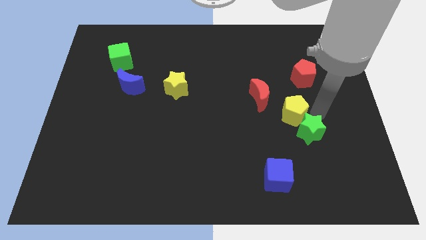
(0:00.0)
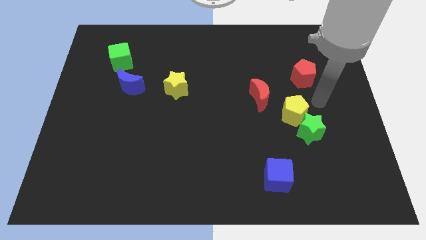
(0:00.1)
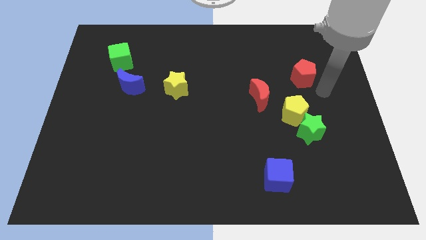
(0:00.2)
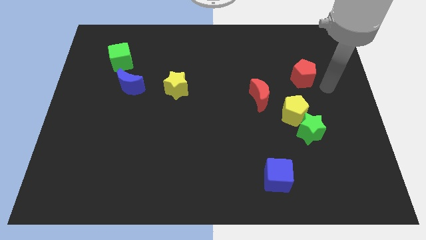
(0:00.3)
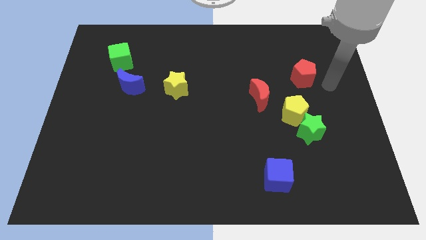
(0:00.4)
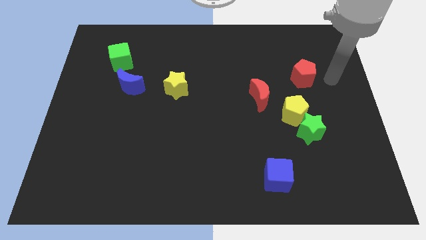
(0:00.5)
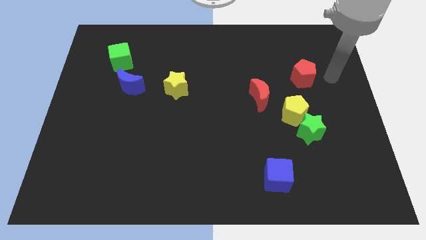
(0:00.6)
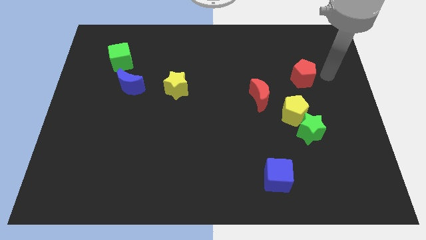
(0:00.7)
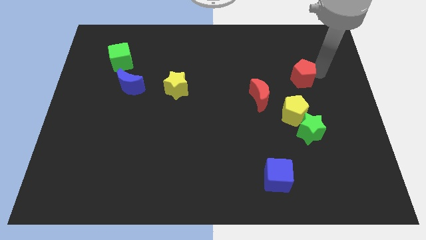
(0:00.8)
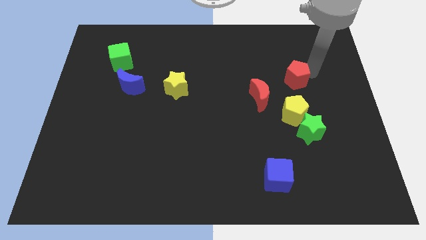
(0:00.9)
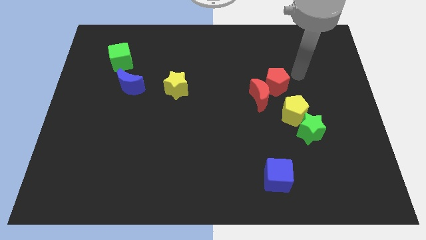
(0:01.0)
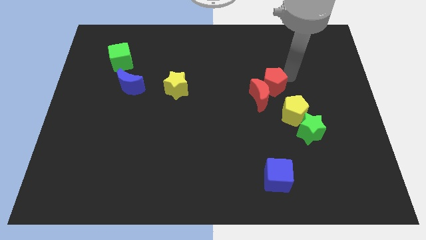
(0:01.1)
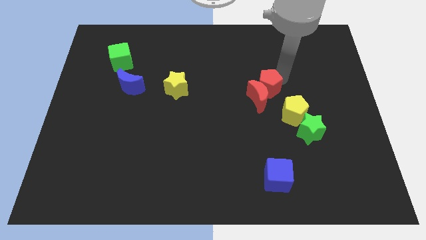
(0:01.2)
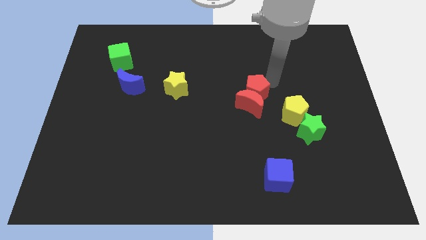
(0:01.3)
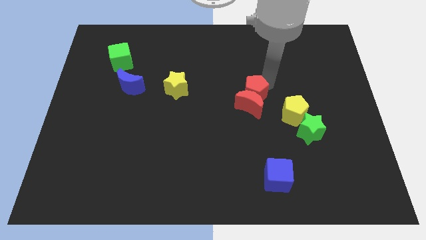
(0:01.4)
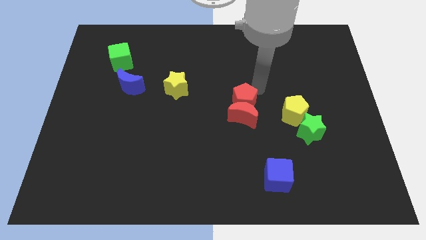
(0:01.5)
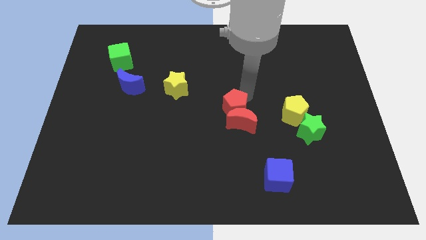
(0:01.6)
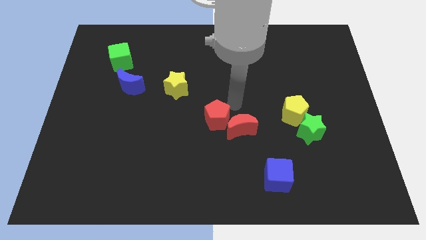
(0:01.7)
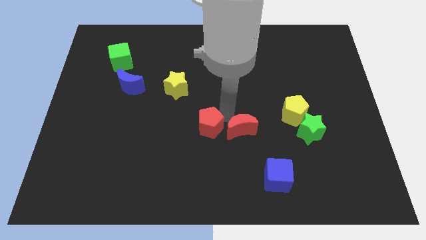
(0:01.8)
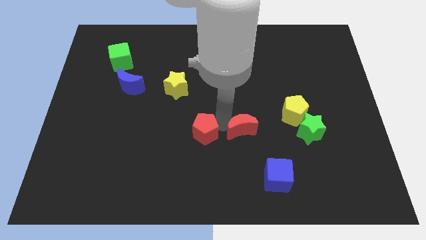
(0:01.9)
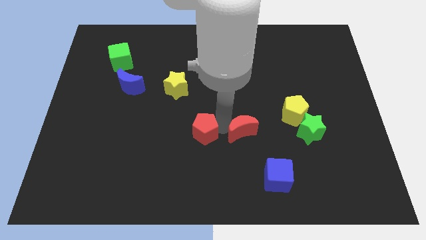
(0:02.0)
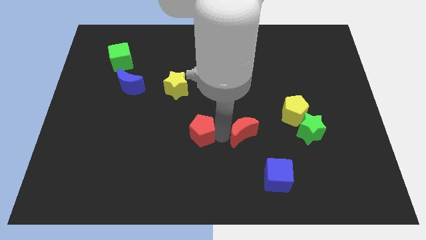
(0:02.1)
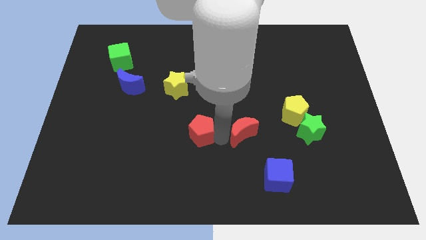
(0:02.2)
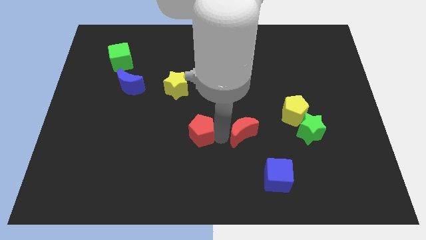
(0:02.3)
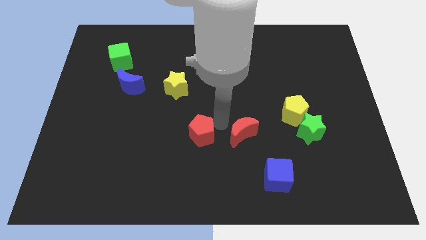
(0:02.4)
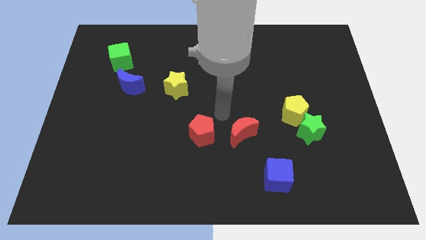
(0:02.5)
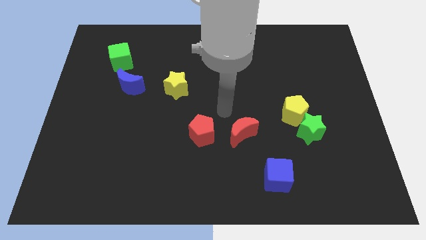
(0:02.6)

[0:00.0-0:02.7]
push the red blocks towards the bottom center of the board

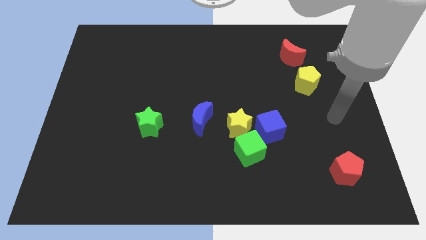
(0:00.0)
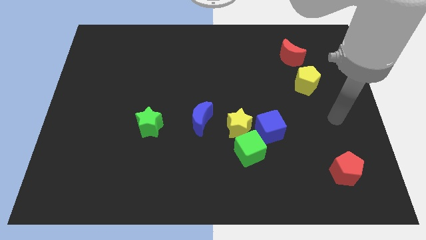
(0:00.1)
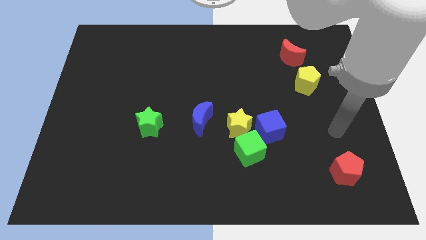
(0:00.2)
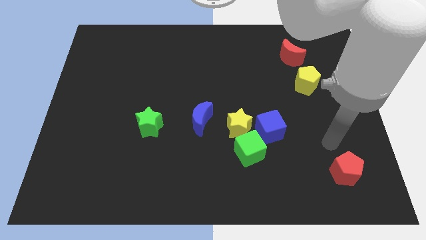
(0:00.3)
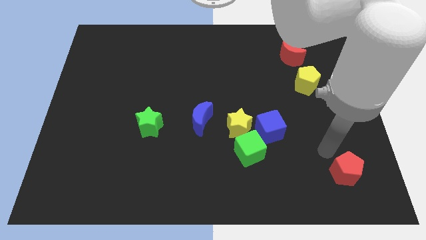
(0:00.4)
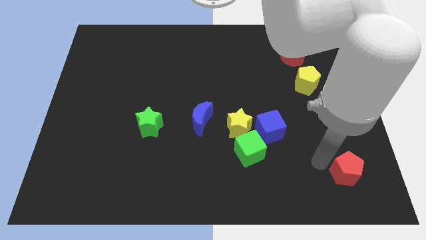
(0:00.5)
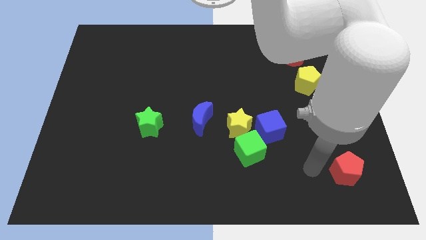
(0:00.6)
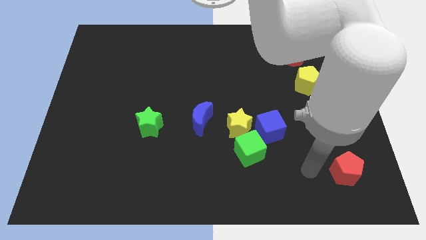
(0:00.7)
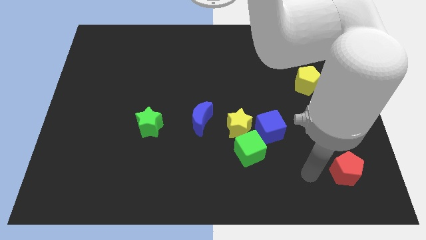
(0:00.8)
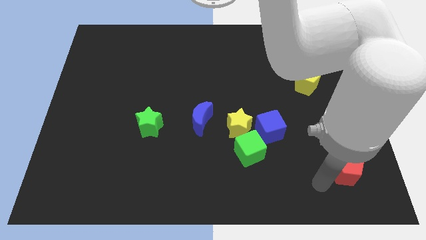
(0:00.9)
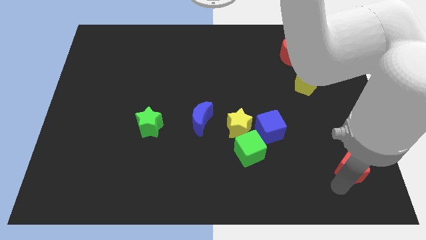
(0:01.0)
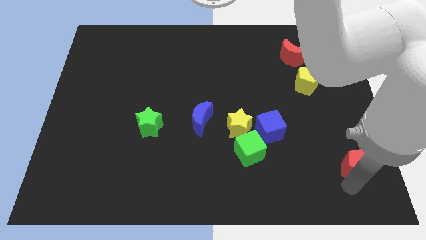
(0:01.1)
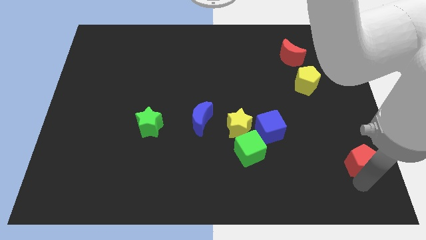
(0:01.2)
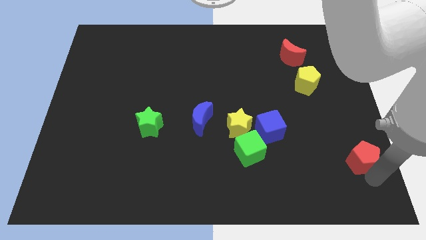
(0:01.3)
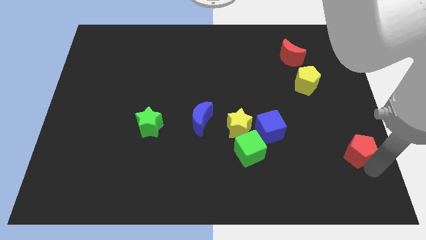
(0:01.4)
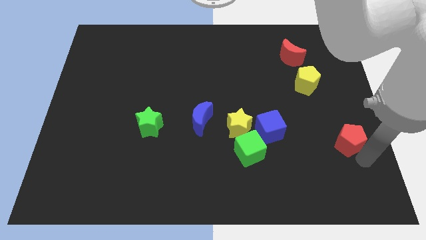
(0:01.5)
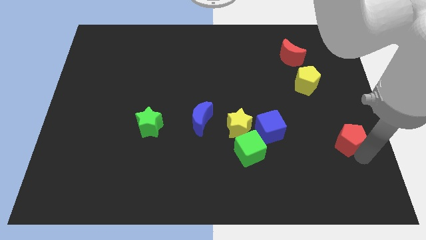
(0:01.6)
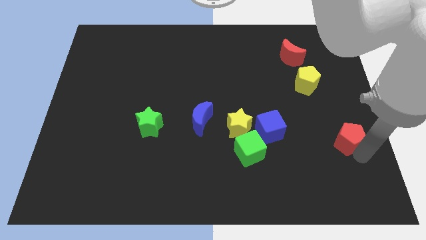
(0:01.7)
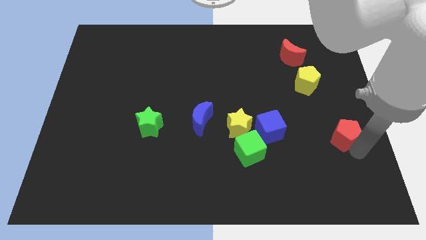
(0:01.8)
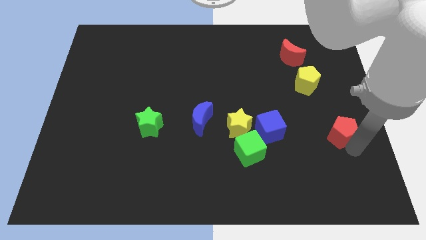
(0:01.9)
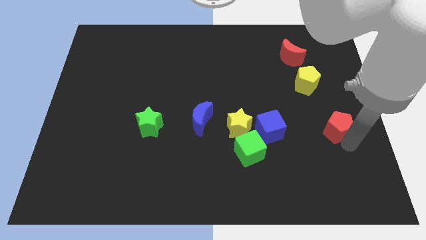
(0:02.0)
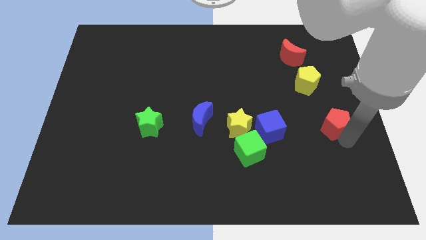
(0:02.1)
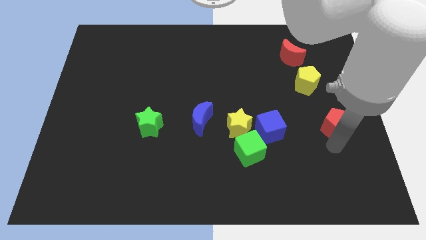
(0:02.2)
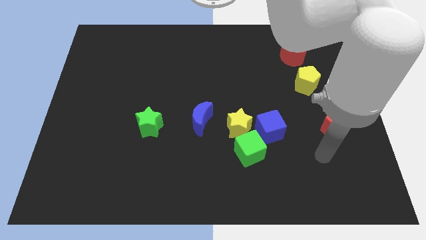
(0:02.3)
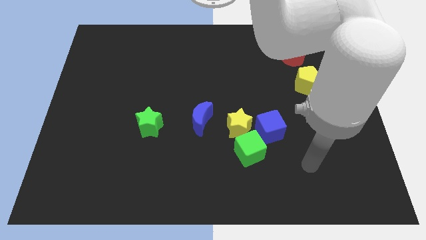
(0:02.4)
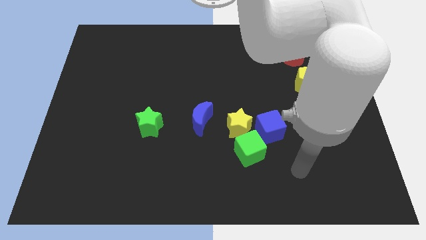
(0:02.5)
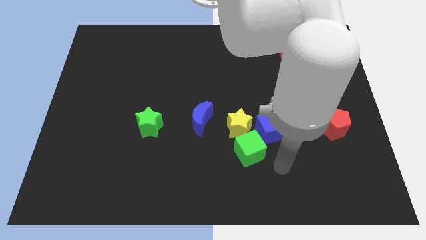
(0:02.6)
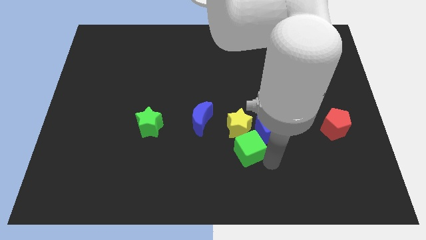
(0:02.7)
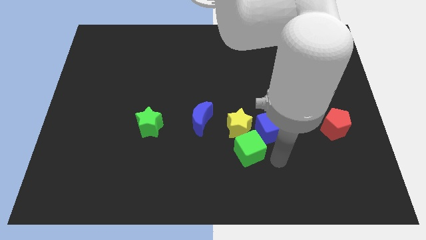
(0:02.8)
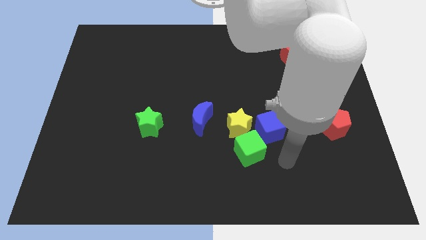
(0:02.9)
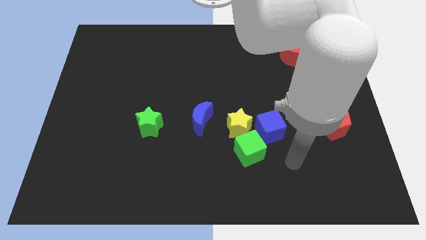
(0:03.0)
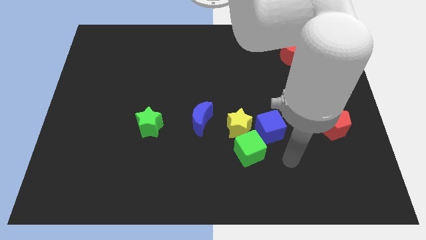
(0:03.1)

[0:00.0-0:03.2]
move red pentagon towards yellow pentagon

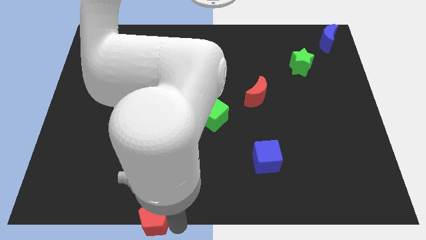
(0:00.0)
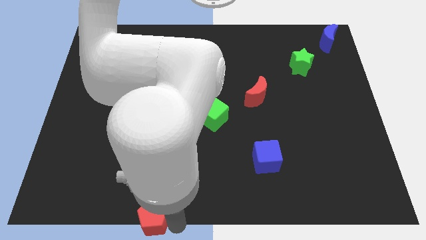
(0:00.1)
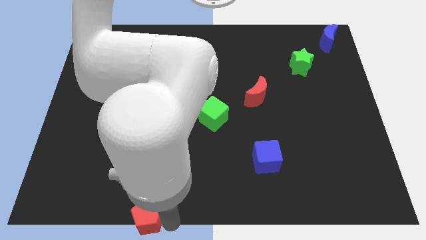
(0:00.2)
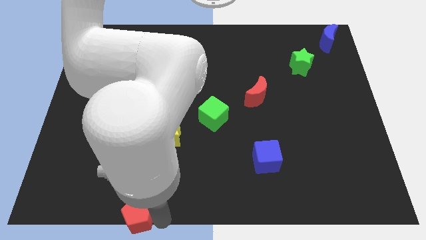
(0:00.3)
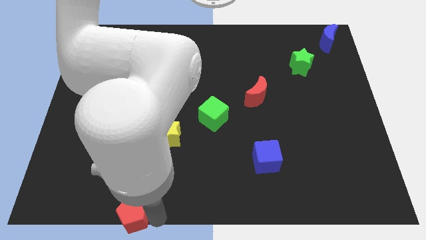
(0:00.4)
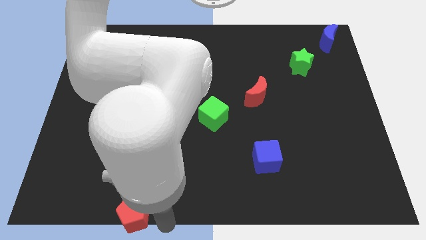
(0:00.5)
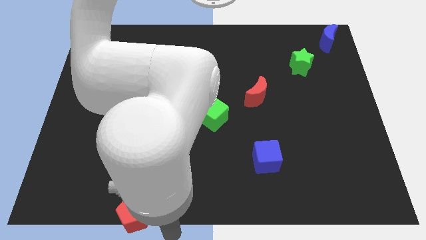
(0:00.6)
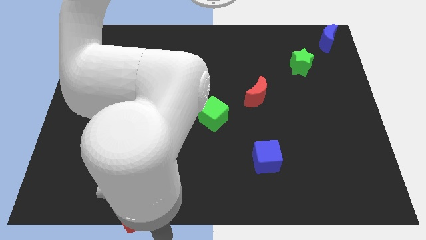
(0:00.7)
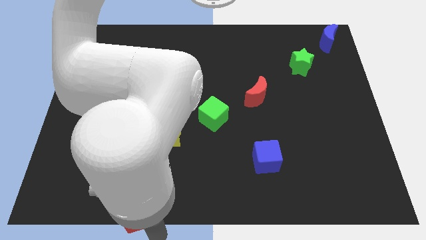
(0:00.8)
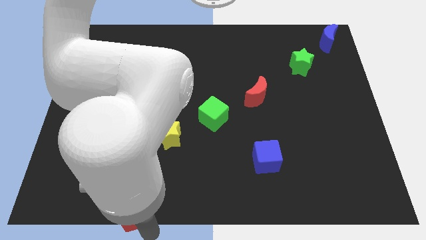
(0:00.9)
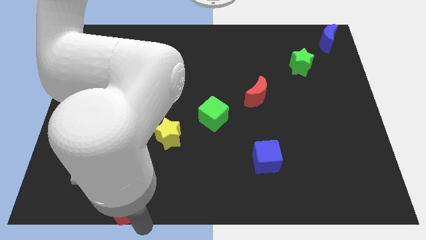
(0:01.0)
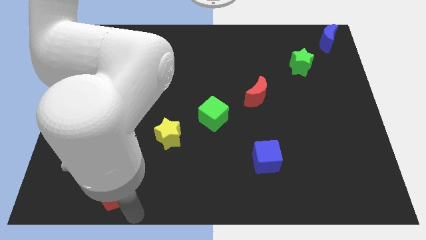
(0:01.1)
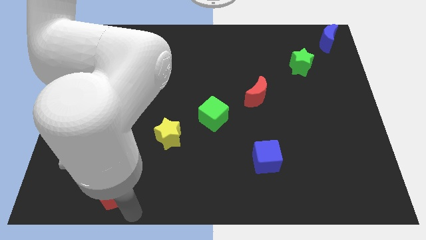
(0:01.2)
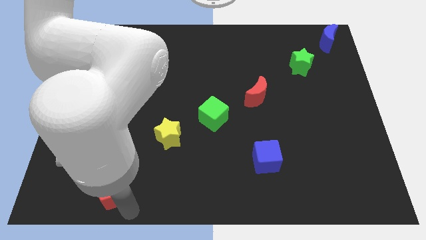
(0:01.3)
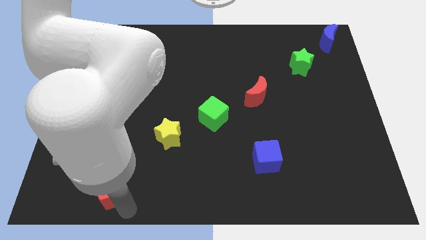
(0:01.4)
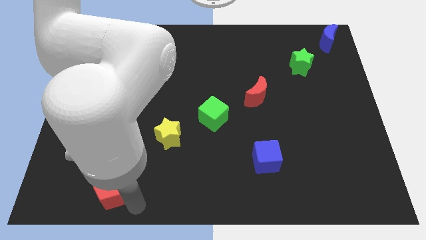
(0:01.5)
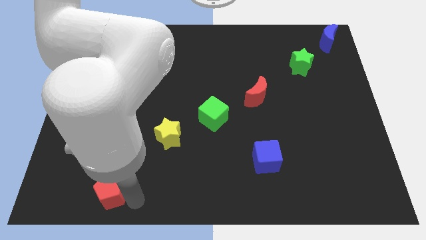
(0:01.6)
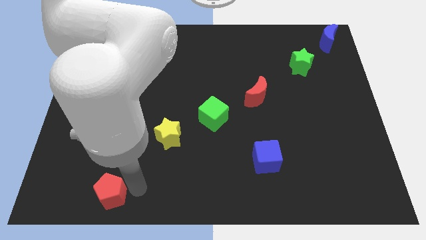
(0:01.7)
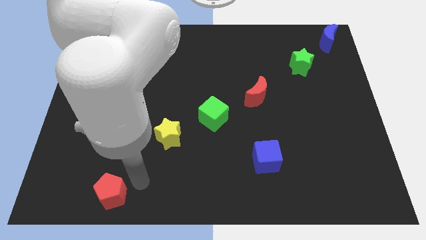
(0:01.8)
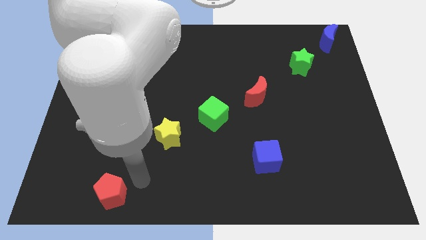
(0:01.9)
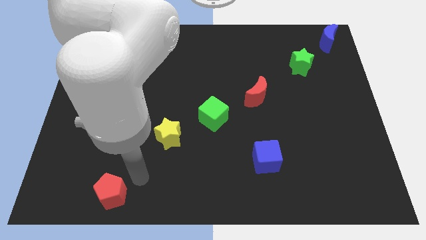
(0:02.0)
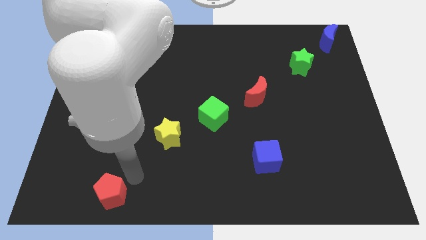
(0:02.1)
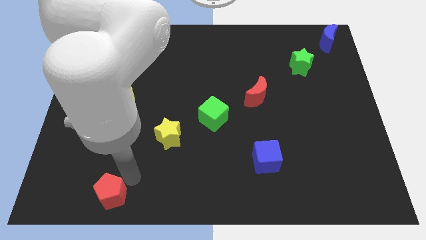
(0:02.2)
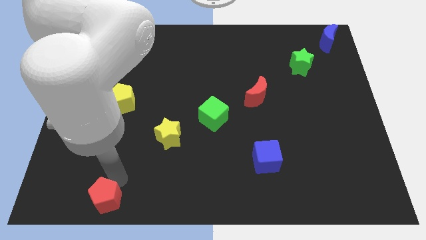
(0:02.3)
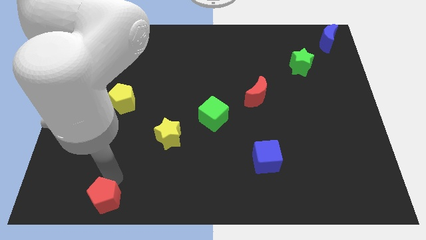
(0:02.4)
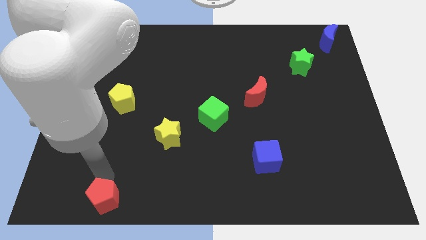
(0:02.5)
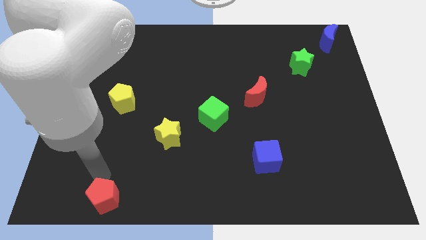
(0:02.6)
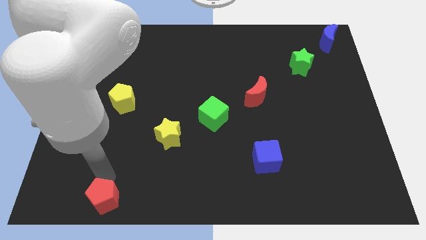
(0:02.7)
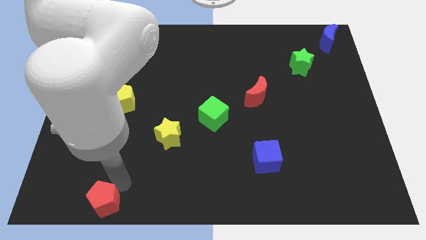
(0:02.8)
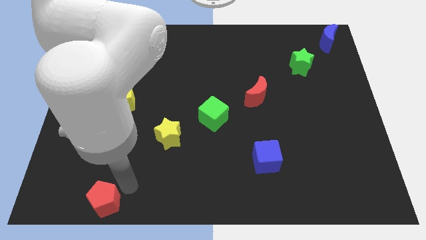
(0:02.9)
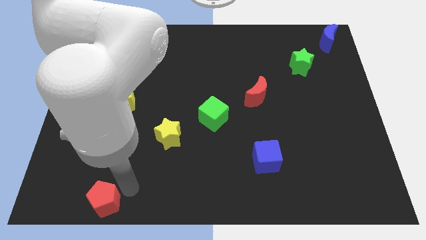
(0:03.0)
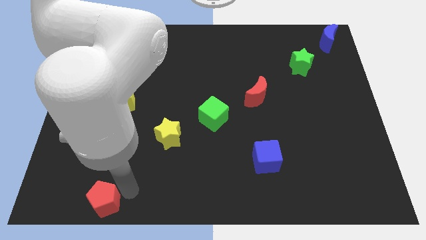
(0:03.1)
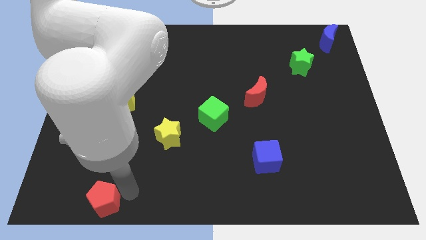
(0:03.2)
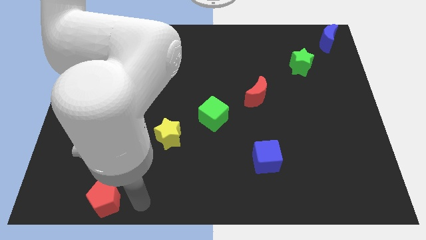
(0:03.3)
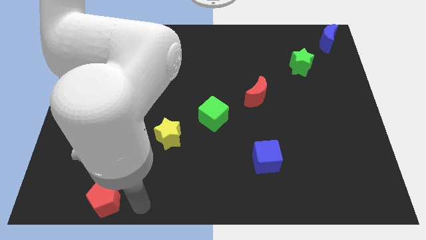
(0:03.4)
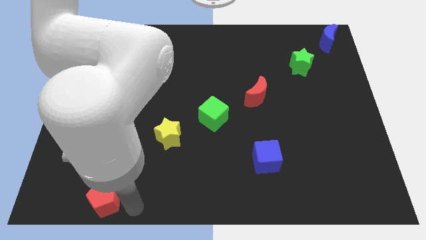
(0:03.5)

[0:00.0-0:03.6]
slide the red pentagon vertically below the yellow pentagon
